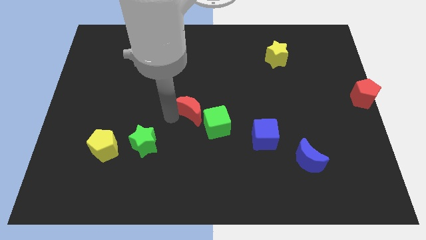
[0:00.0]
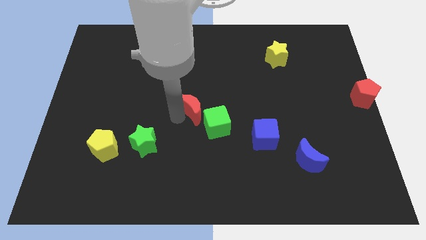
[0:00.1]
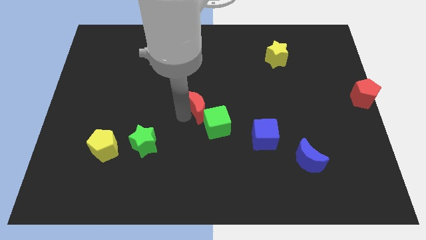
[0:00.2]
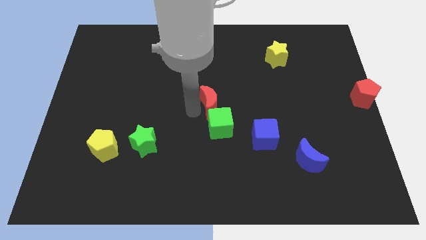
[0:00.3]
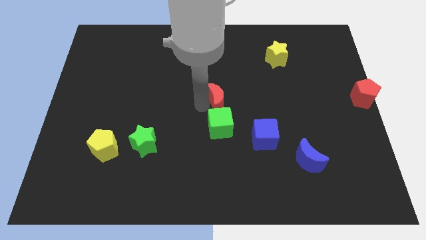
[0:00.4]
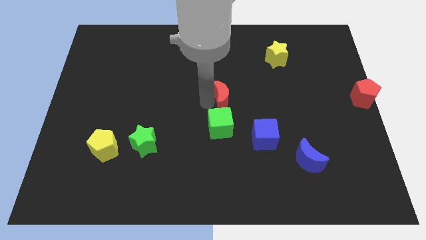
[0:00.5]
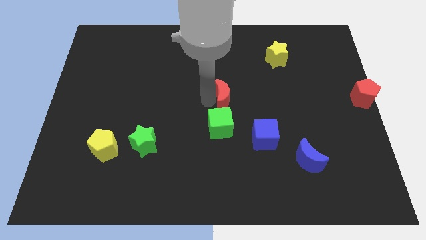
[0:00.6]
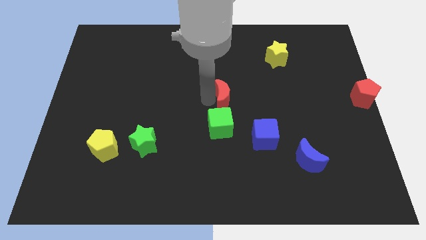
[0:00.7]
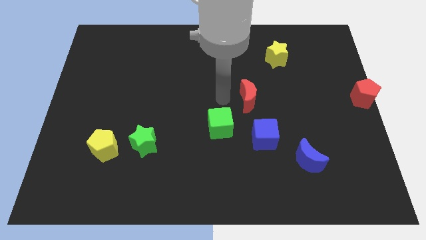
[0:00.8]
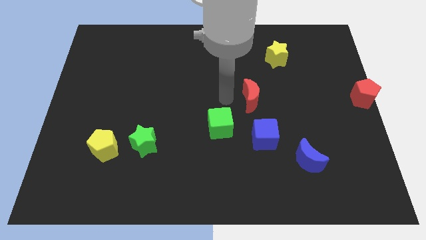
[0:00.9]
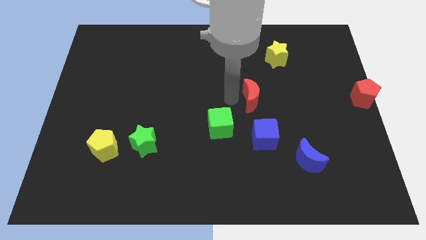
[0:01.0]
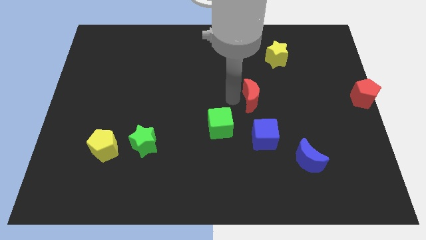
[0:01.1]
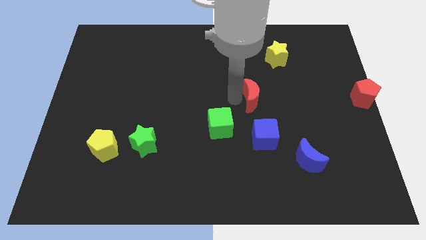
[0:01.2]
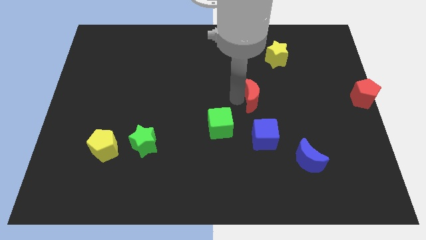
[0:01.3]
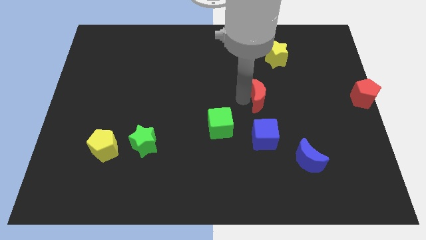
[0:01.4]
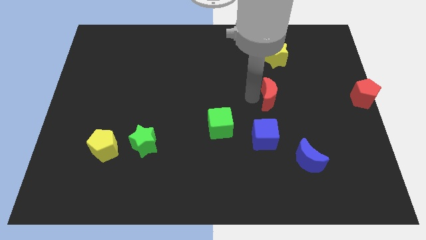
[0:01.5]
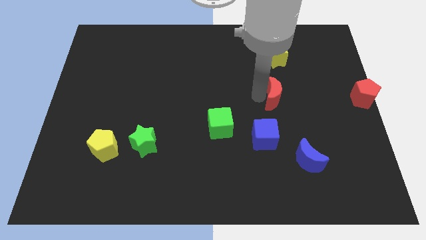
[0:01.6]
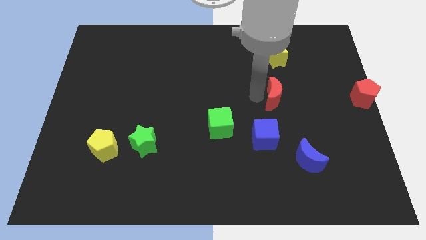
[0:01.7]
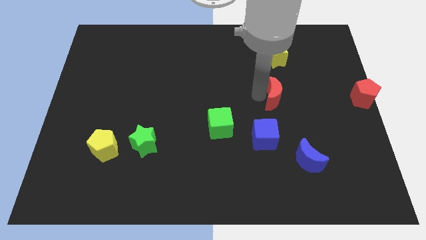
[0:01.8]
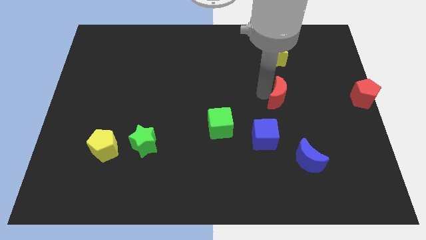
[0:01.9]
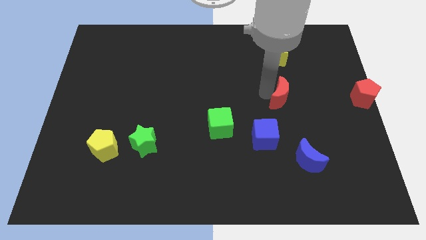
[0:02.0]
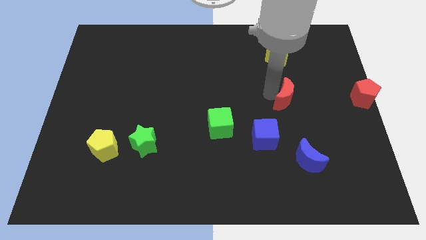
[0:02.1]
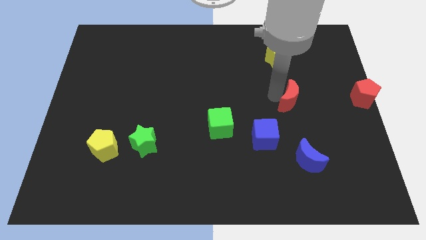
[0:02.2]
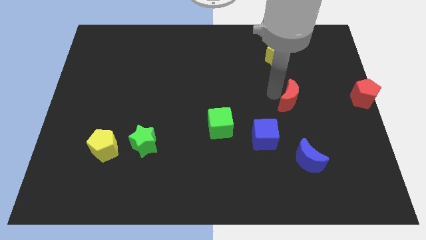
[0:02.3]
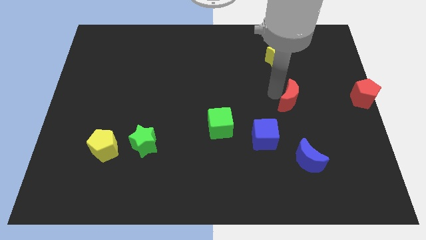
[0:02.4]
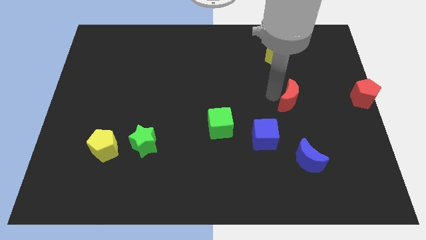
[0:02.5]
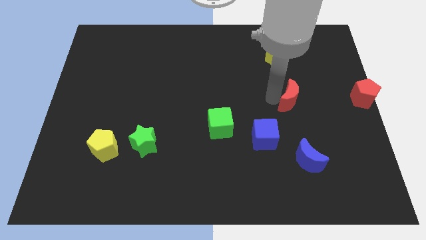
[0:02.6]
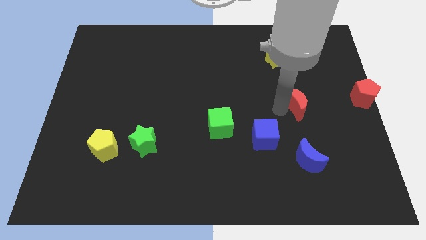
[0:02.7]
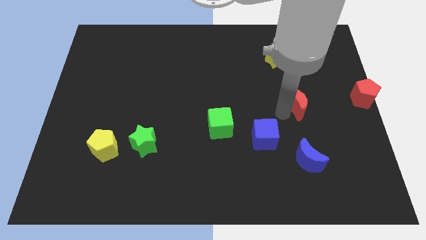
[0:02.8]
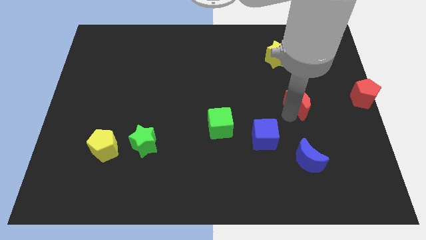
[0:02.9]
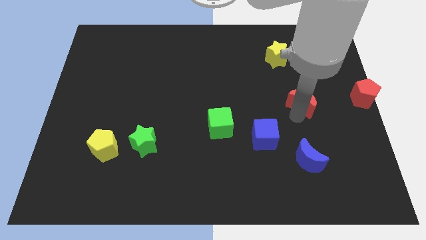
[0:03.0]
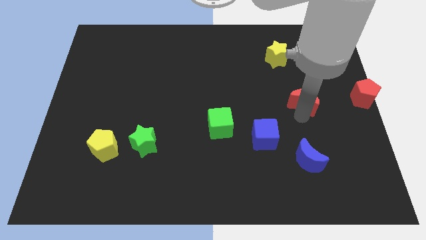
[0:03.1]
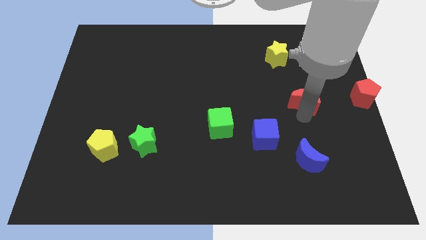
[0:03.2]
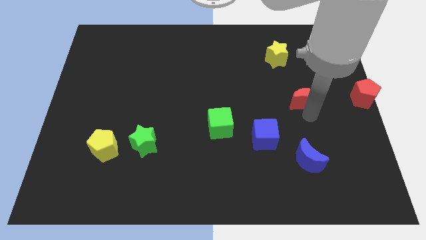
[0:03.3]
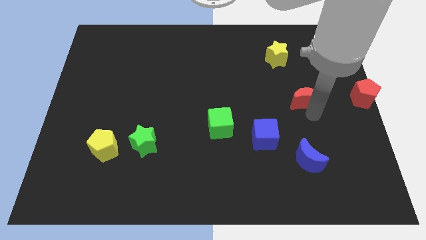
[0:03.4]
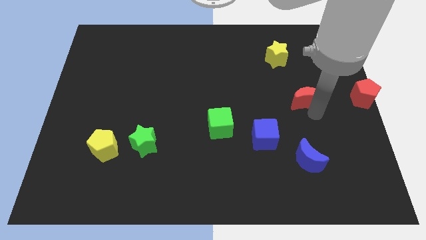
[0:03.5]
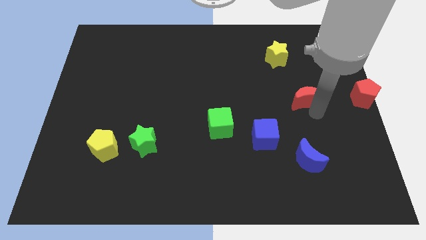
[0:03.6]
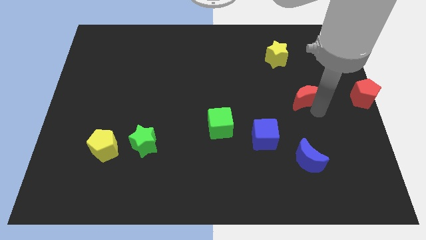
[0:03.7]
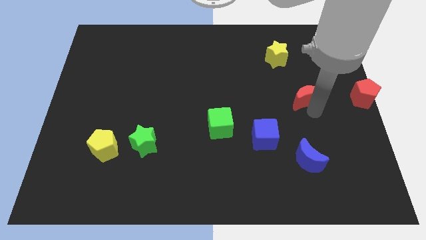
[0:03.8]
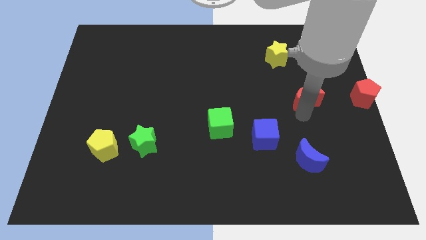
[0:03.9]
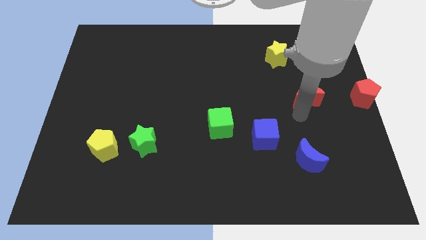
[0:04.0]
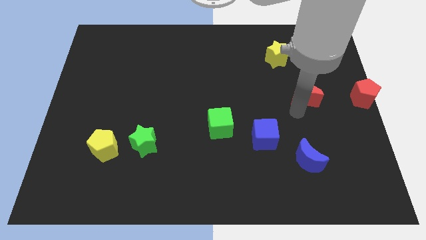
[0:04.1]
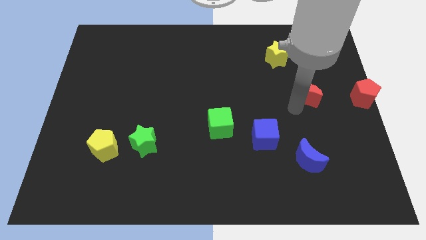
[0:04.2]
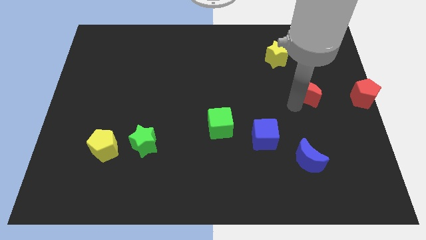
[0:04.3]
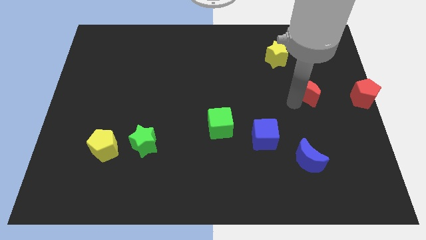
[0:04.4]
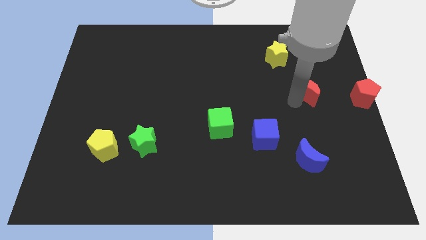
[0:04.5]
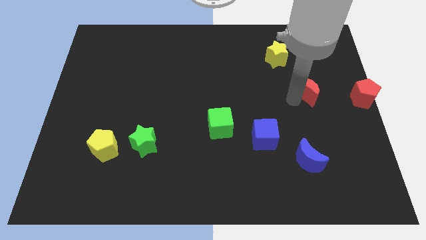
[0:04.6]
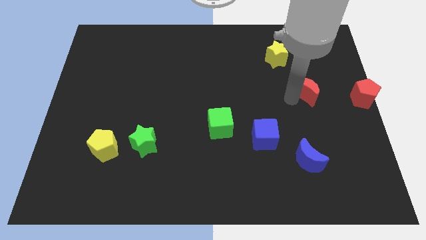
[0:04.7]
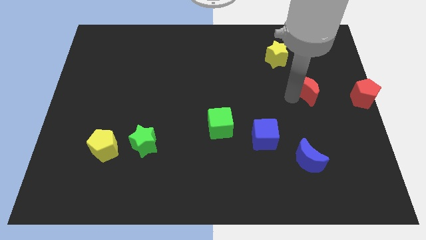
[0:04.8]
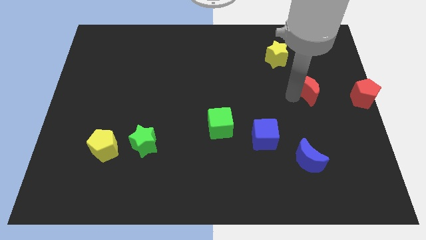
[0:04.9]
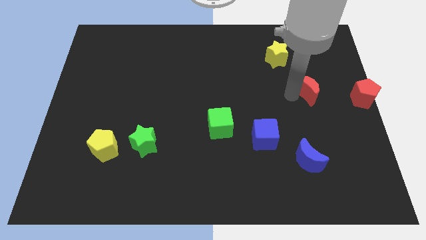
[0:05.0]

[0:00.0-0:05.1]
place red moon parallel to red pentagon

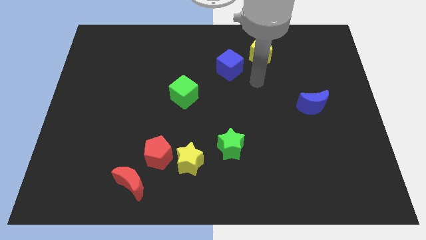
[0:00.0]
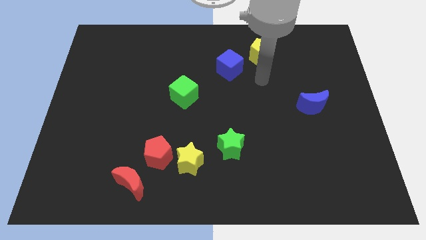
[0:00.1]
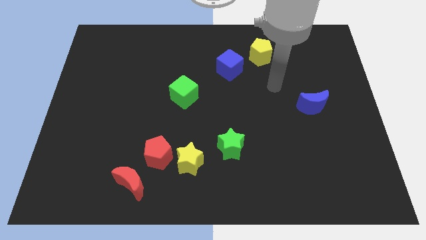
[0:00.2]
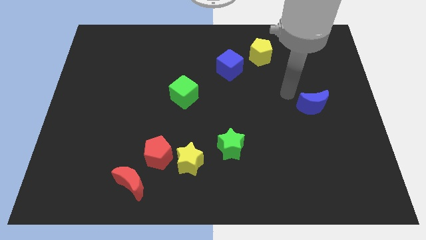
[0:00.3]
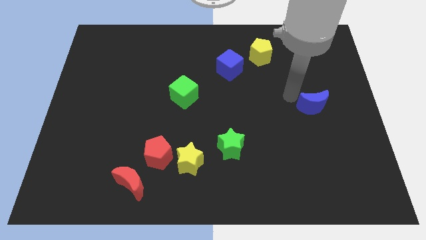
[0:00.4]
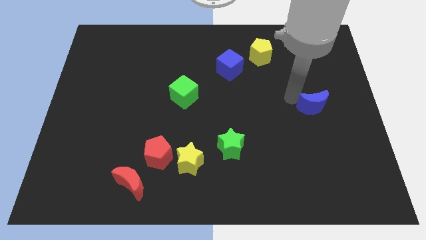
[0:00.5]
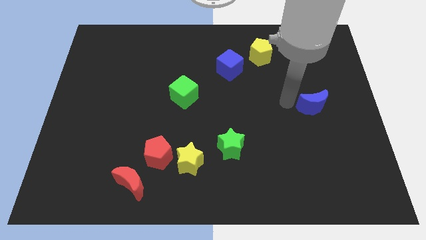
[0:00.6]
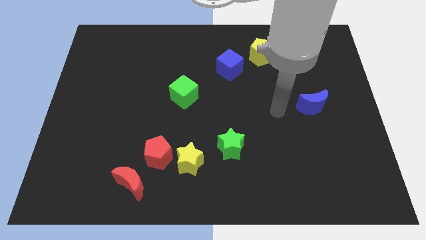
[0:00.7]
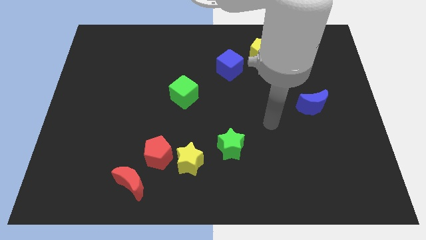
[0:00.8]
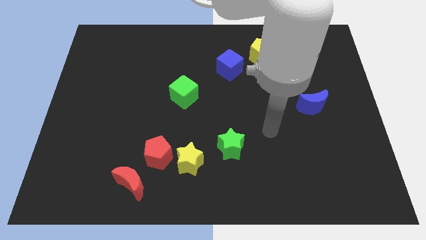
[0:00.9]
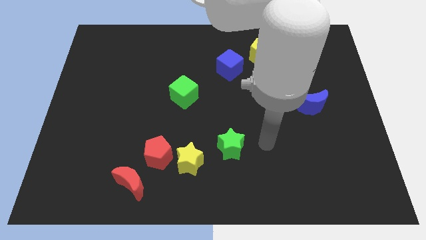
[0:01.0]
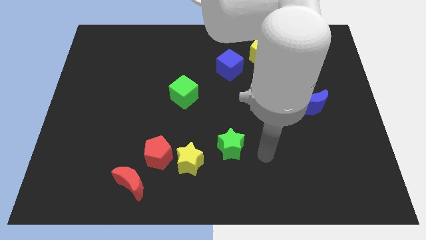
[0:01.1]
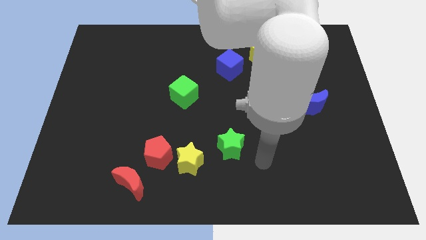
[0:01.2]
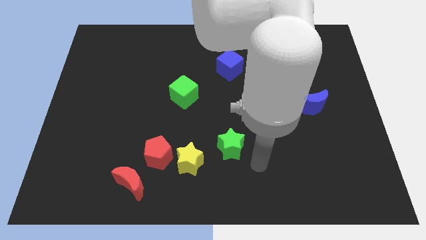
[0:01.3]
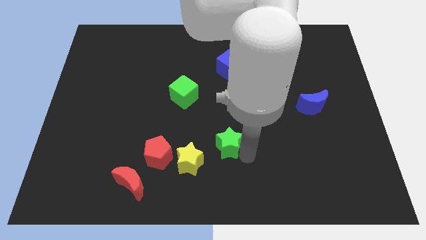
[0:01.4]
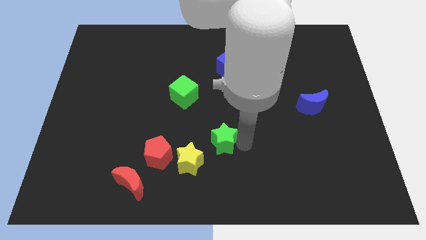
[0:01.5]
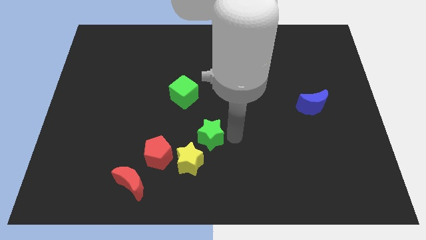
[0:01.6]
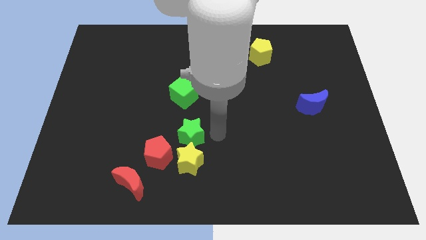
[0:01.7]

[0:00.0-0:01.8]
push green star above the yellow star

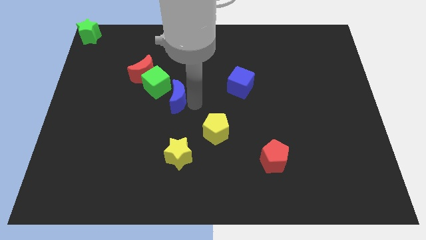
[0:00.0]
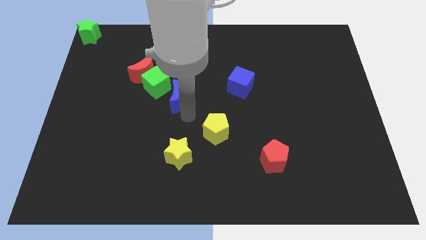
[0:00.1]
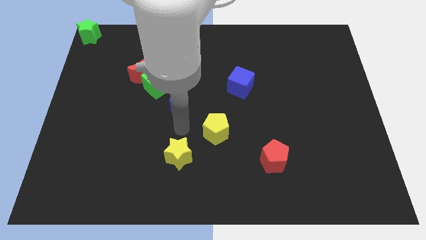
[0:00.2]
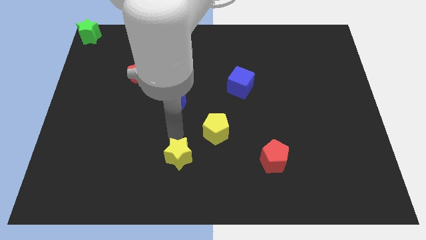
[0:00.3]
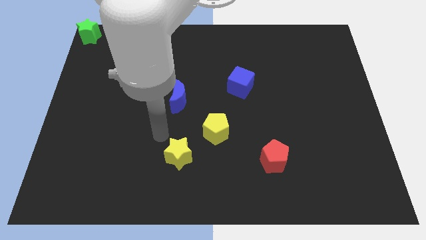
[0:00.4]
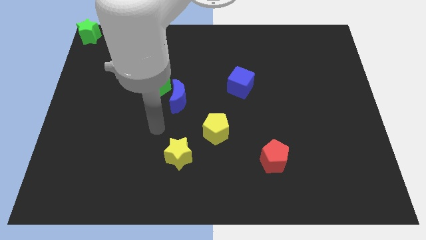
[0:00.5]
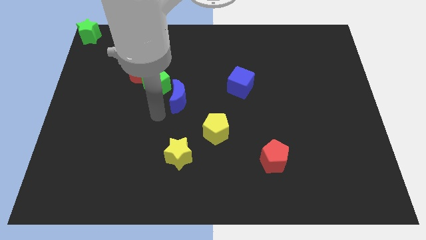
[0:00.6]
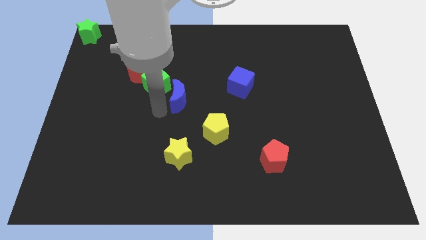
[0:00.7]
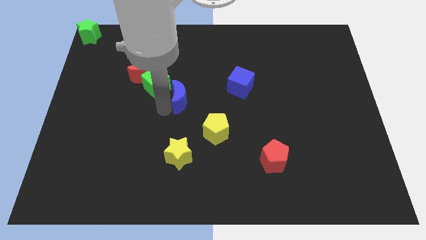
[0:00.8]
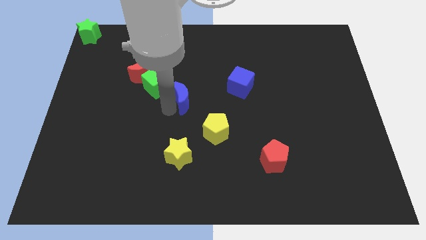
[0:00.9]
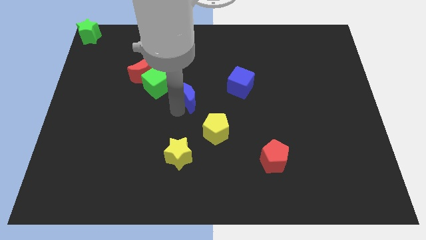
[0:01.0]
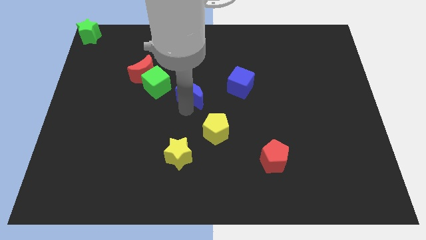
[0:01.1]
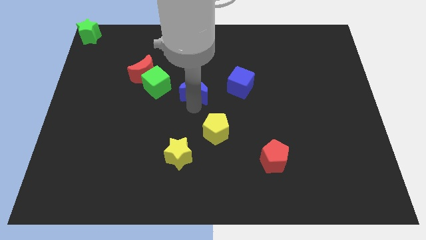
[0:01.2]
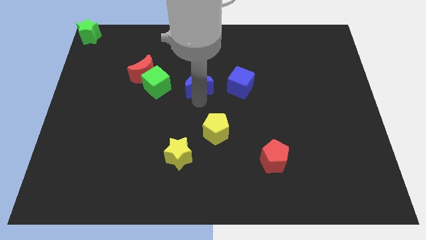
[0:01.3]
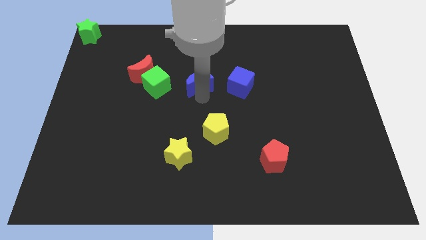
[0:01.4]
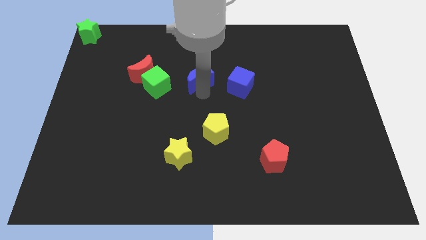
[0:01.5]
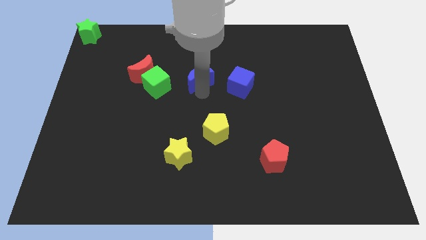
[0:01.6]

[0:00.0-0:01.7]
move the blue crescent in between the blue cube and green cube

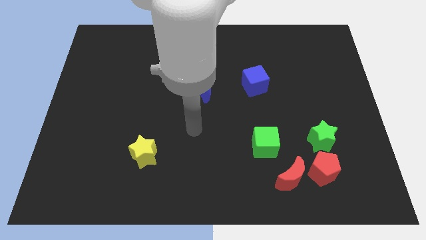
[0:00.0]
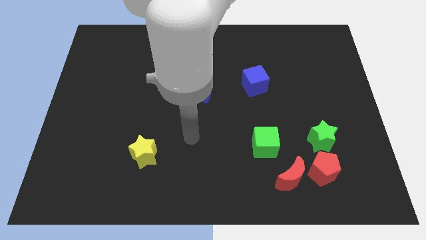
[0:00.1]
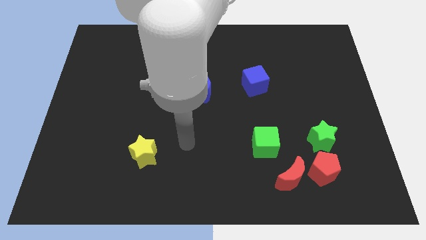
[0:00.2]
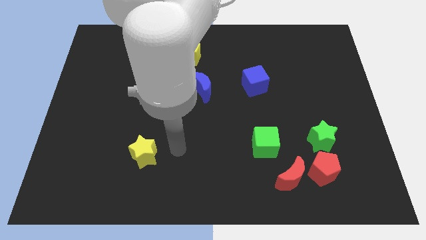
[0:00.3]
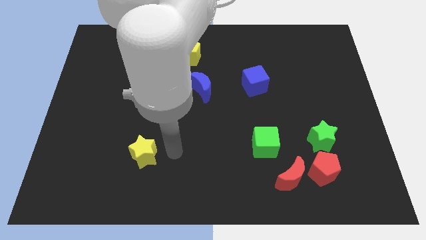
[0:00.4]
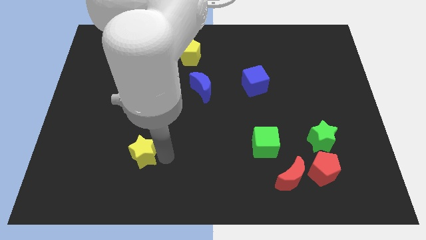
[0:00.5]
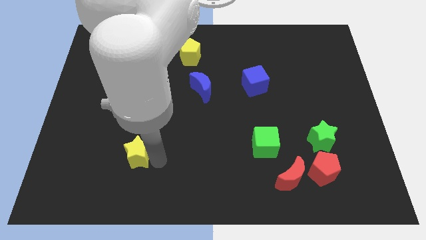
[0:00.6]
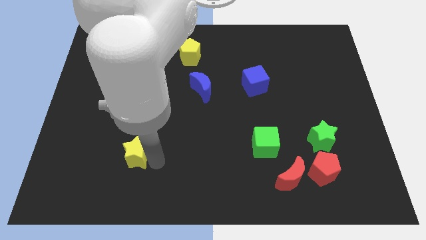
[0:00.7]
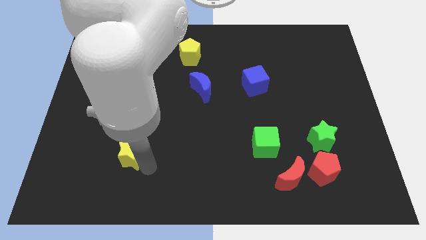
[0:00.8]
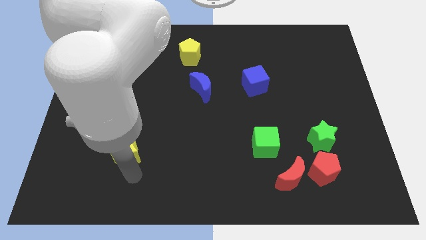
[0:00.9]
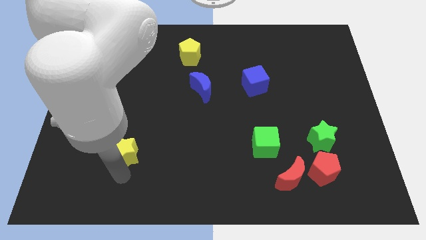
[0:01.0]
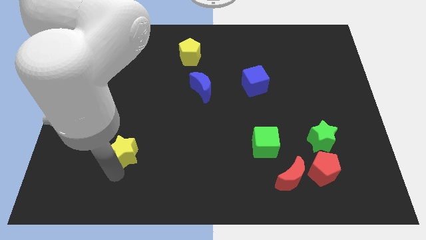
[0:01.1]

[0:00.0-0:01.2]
push the yellow star slightly to the left
